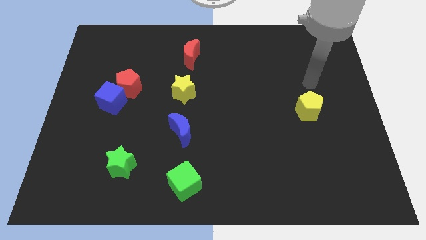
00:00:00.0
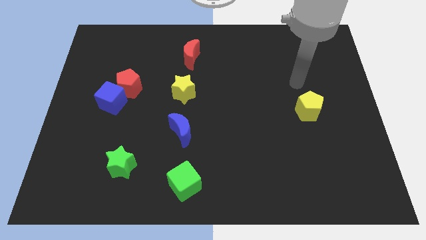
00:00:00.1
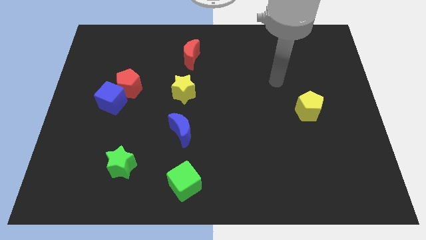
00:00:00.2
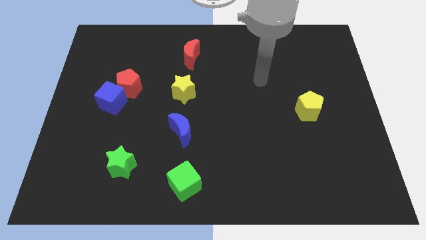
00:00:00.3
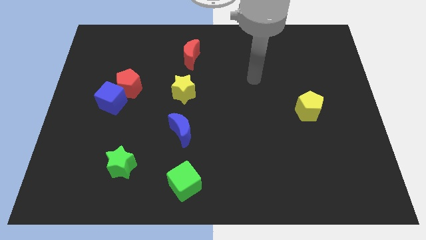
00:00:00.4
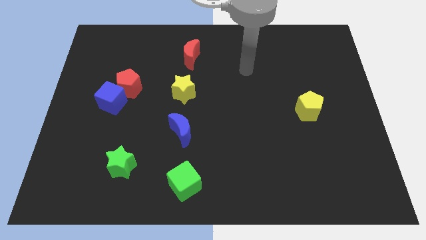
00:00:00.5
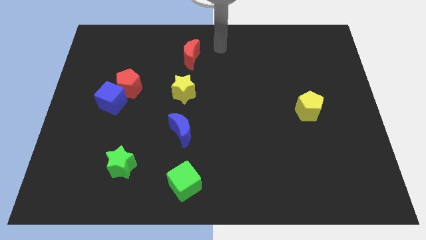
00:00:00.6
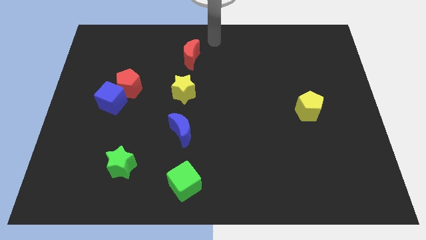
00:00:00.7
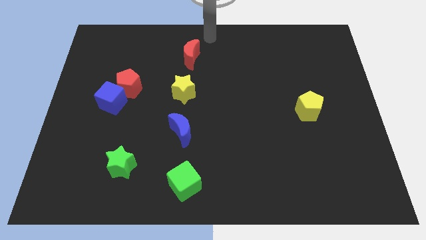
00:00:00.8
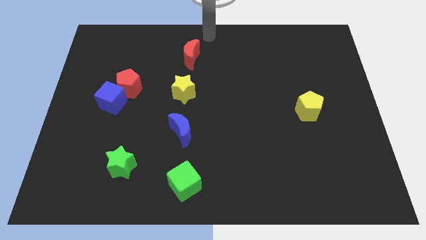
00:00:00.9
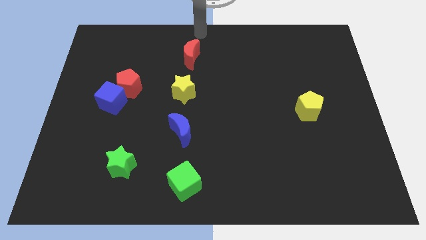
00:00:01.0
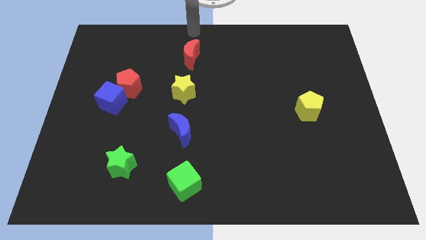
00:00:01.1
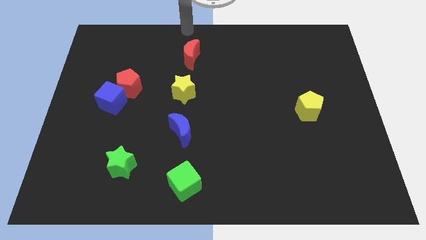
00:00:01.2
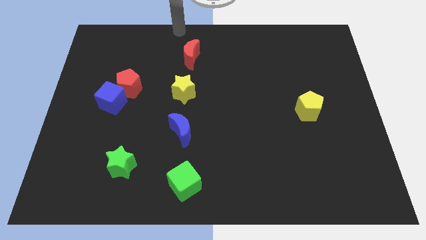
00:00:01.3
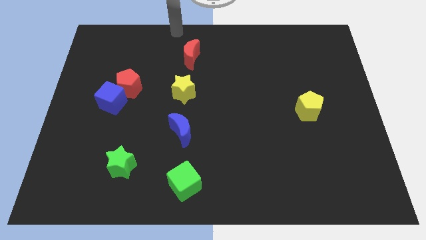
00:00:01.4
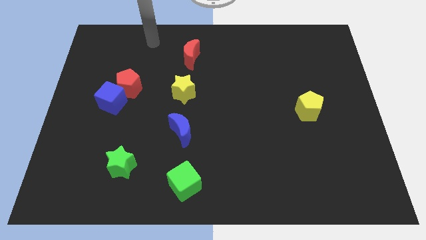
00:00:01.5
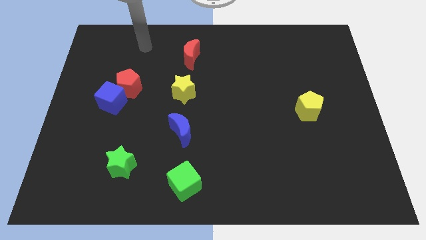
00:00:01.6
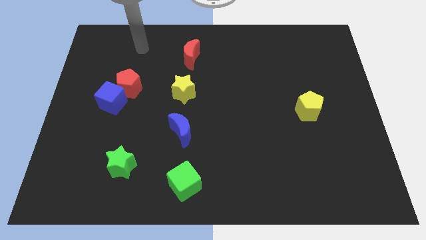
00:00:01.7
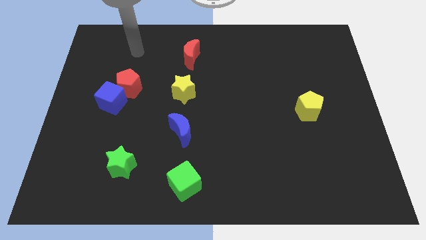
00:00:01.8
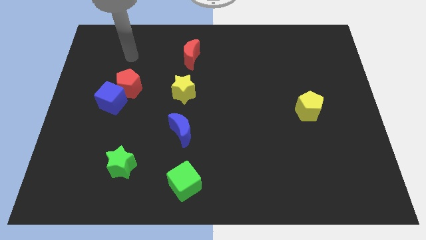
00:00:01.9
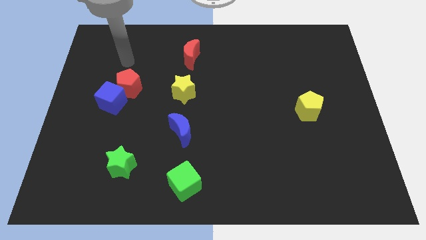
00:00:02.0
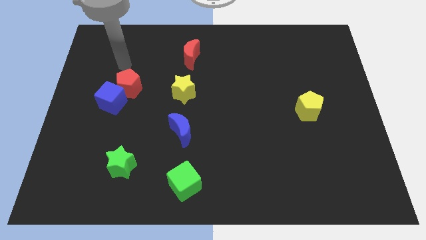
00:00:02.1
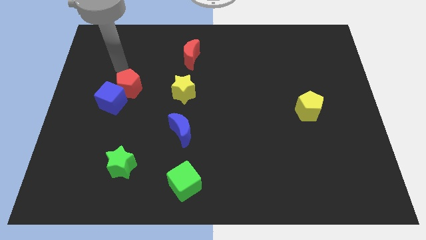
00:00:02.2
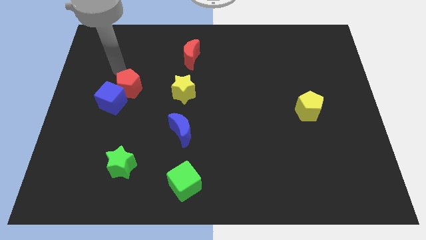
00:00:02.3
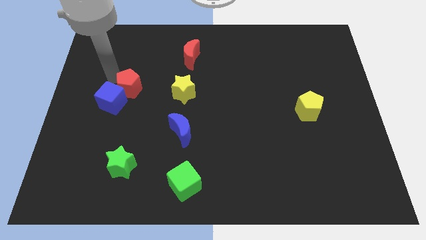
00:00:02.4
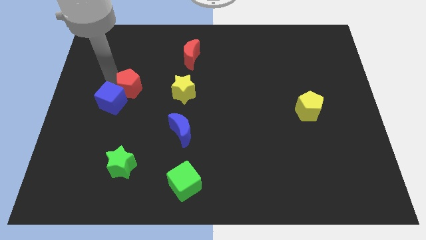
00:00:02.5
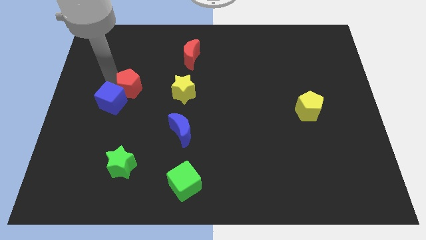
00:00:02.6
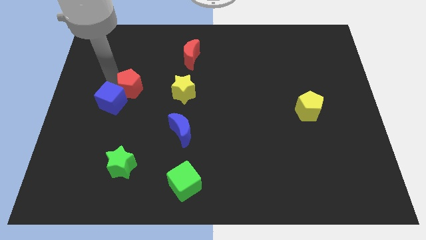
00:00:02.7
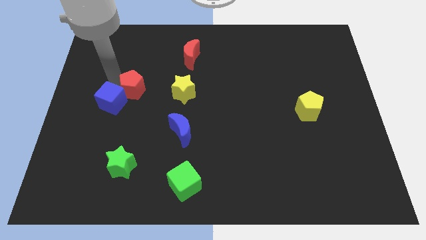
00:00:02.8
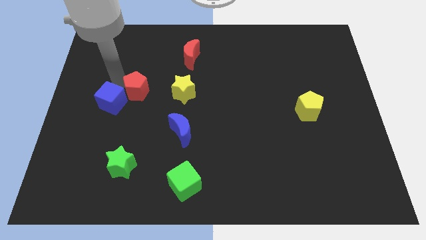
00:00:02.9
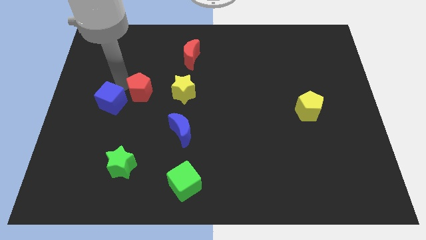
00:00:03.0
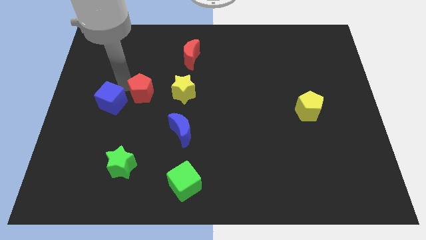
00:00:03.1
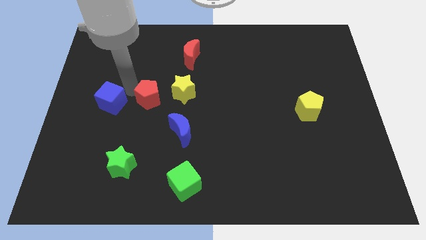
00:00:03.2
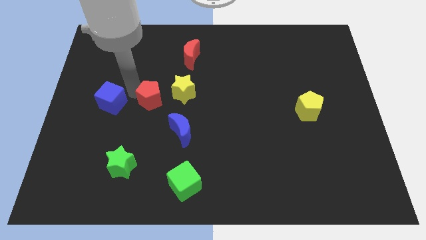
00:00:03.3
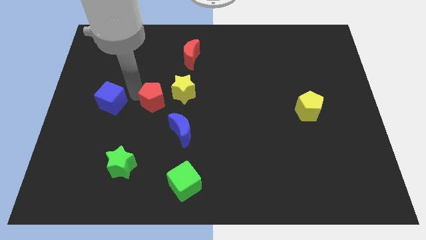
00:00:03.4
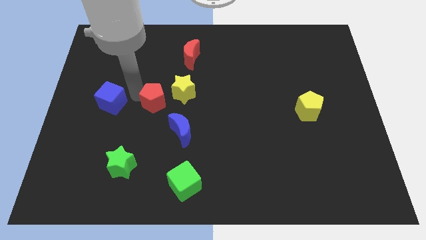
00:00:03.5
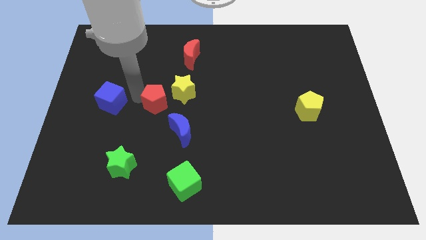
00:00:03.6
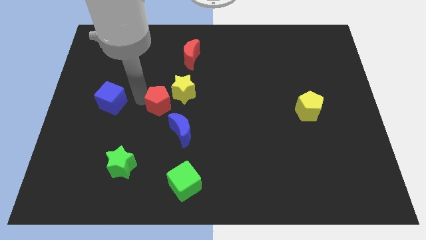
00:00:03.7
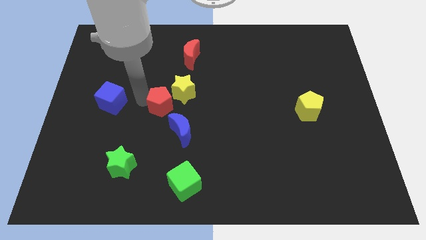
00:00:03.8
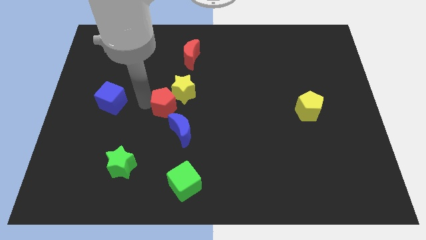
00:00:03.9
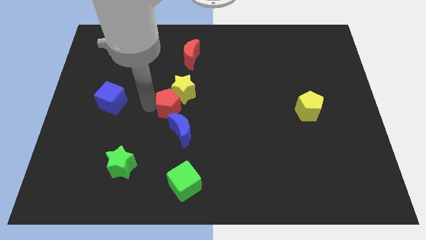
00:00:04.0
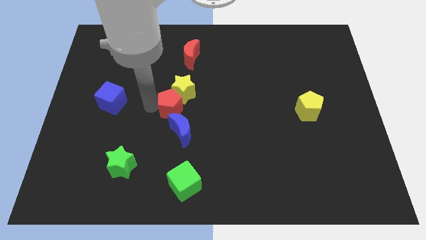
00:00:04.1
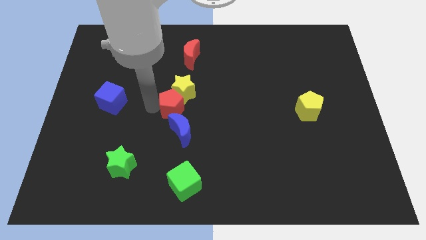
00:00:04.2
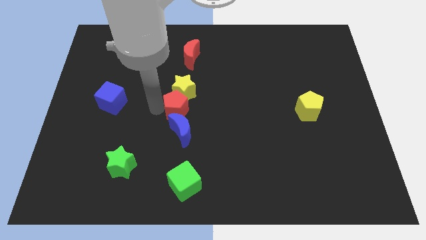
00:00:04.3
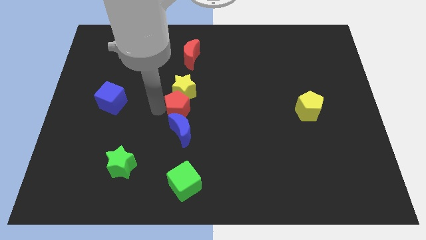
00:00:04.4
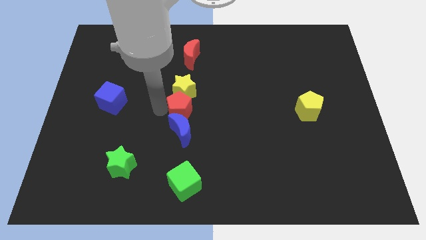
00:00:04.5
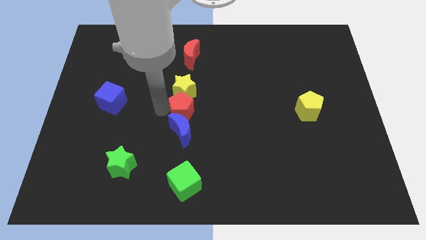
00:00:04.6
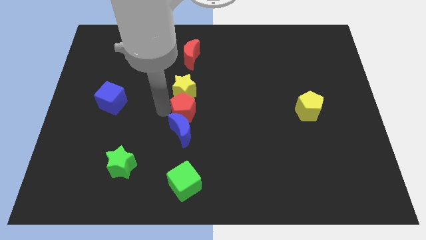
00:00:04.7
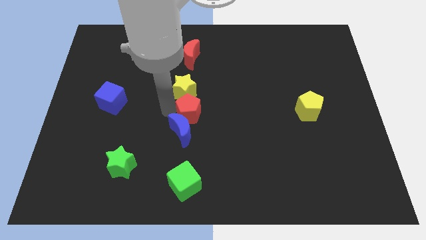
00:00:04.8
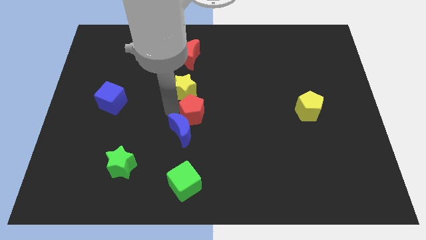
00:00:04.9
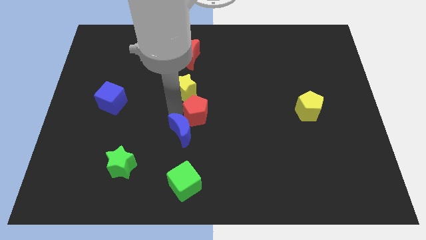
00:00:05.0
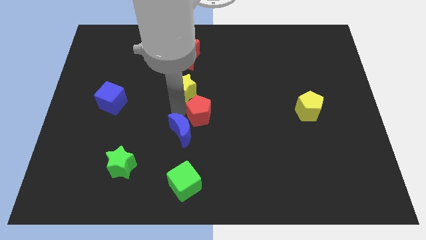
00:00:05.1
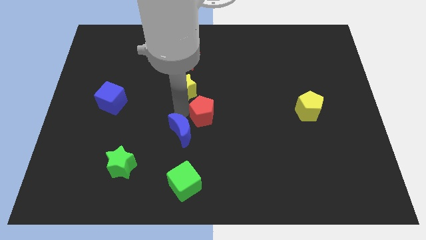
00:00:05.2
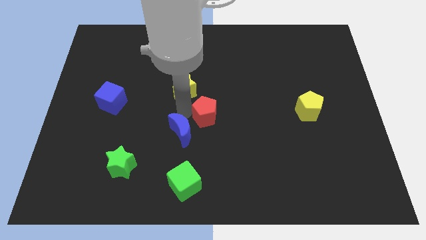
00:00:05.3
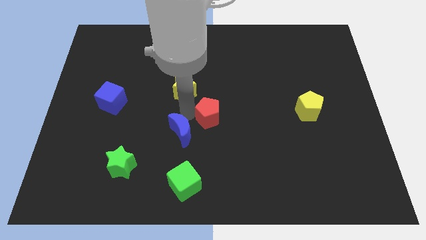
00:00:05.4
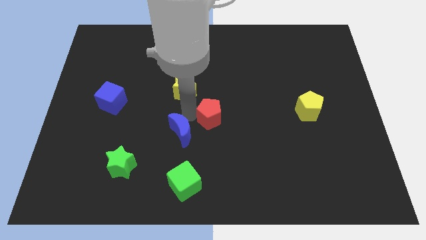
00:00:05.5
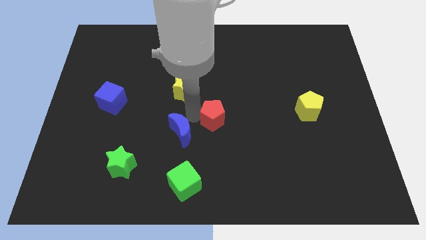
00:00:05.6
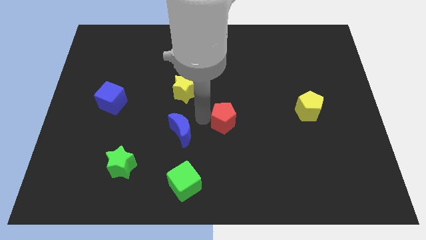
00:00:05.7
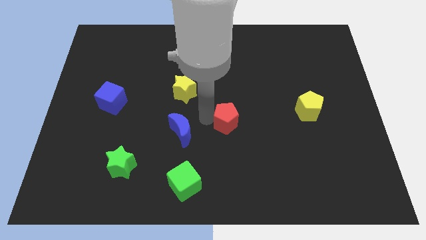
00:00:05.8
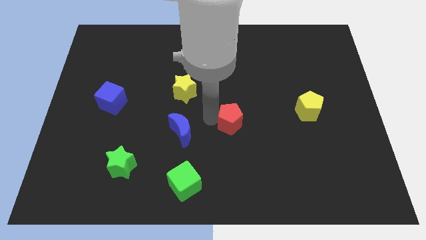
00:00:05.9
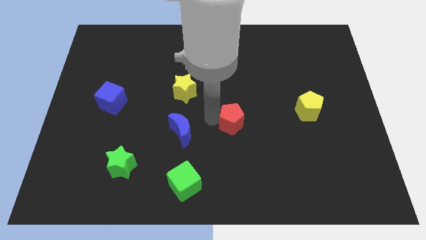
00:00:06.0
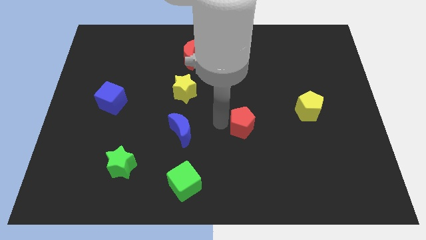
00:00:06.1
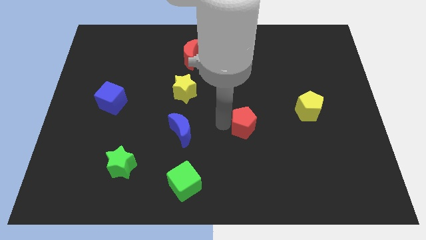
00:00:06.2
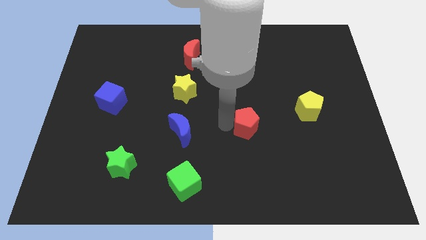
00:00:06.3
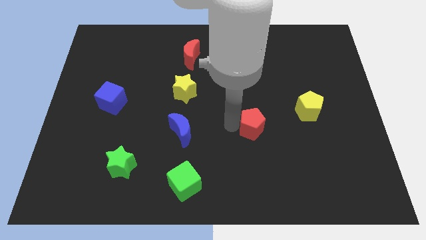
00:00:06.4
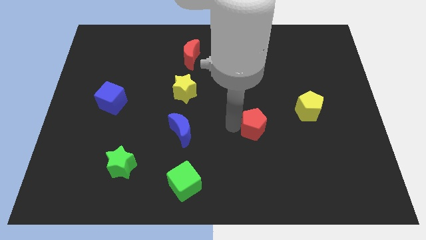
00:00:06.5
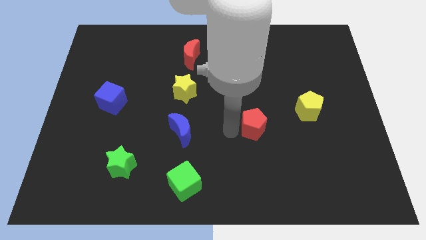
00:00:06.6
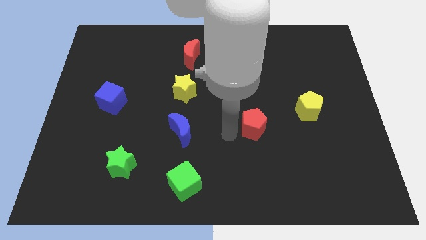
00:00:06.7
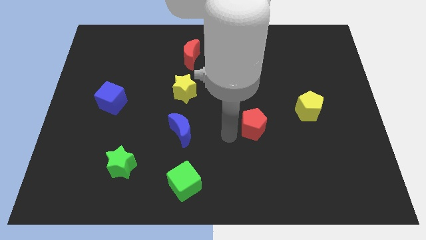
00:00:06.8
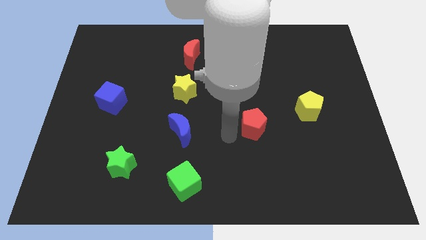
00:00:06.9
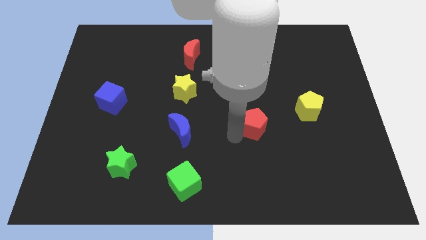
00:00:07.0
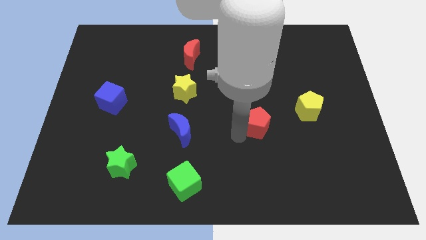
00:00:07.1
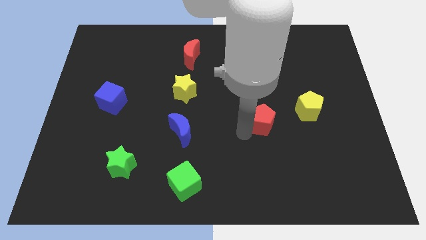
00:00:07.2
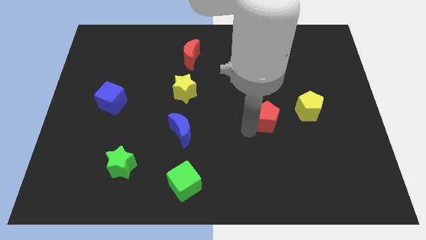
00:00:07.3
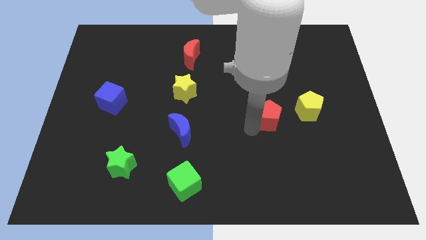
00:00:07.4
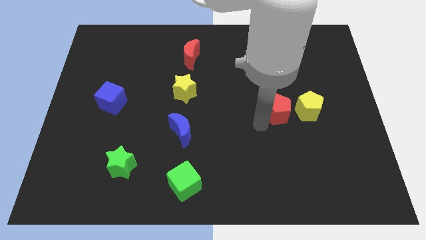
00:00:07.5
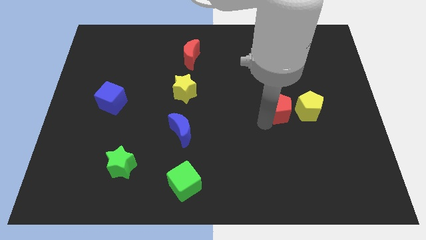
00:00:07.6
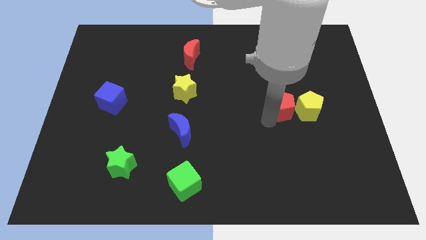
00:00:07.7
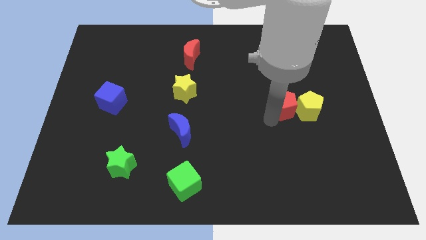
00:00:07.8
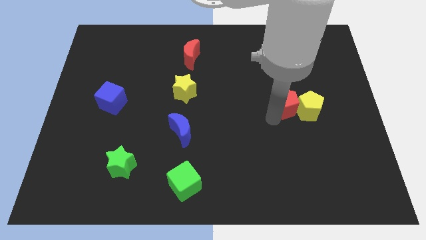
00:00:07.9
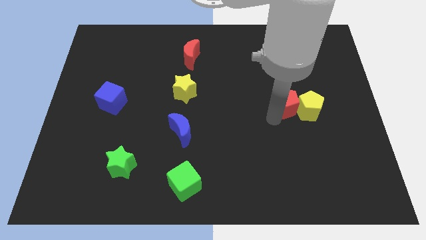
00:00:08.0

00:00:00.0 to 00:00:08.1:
put the red pentagon close to the yellow pentagon
